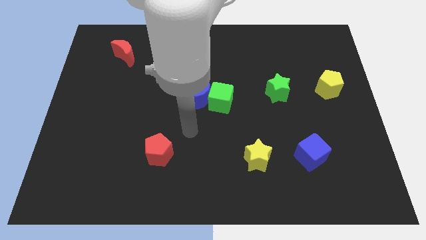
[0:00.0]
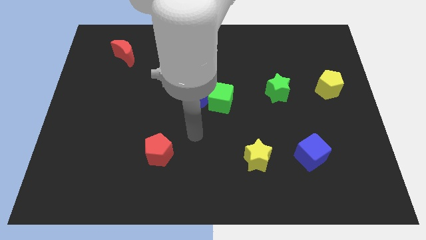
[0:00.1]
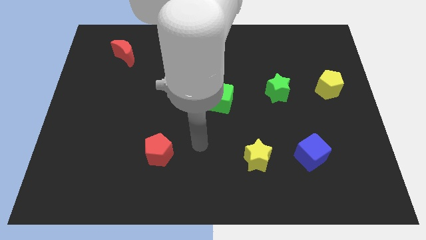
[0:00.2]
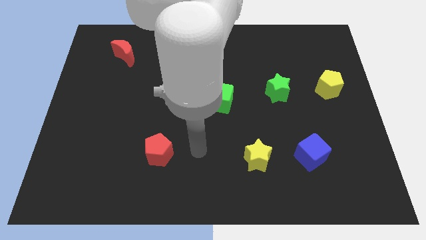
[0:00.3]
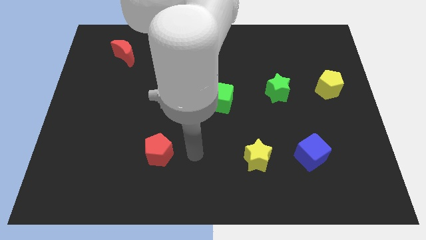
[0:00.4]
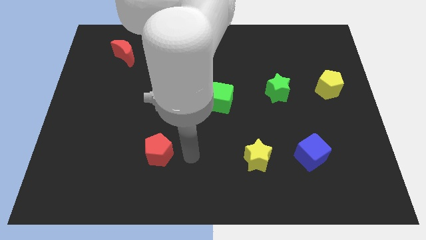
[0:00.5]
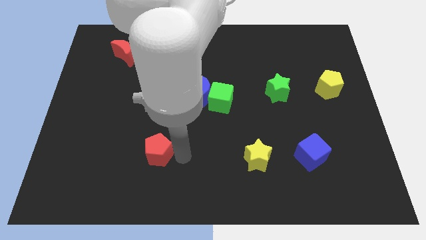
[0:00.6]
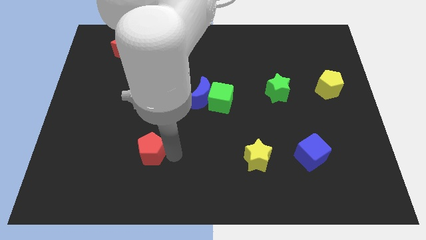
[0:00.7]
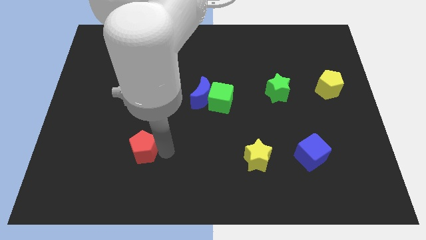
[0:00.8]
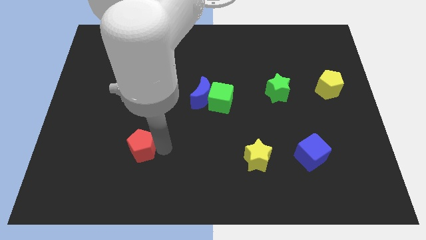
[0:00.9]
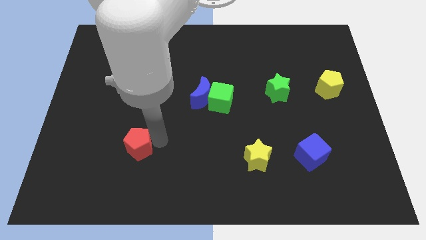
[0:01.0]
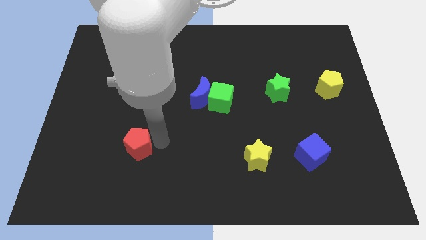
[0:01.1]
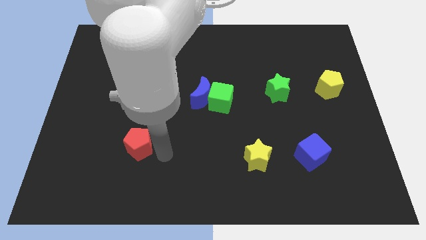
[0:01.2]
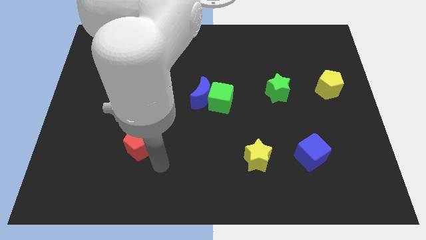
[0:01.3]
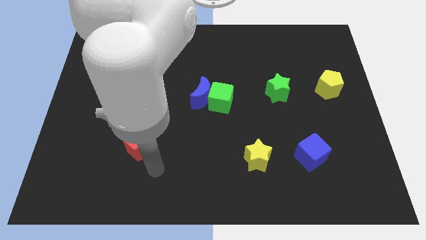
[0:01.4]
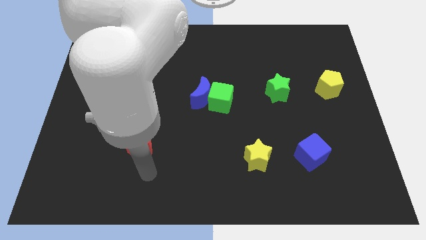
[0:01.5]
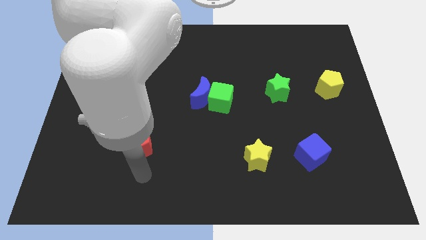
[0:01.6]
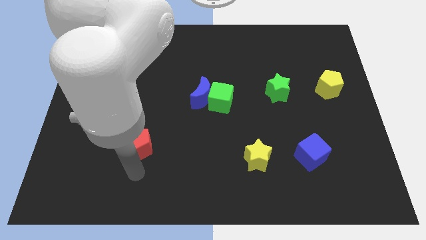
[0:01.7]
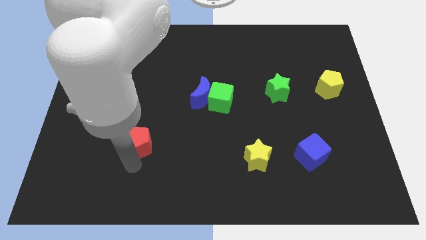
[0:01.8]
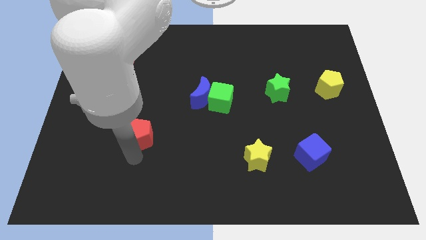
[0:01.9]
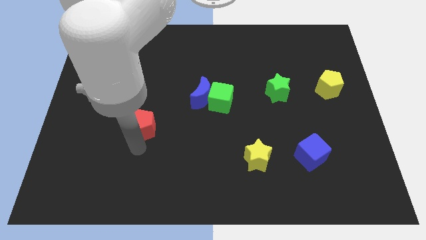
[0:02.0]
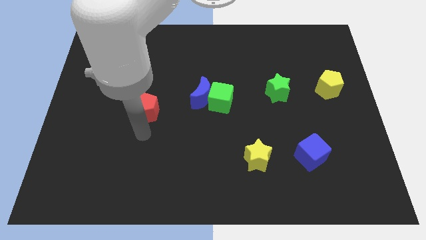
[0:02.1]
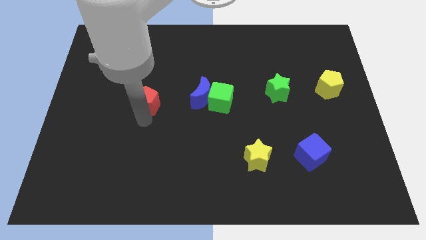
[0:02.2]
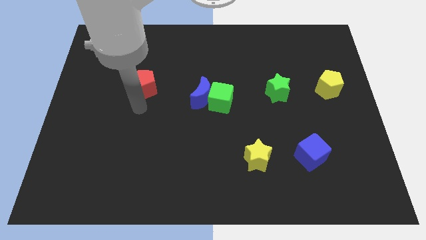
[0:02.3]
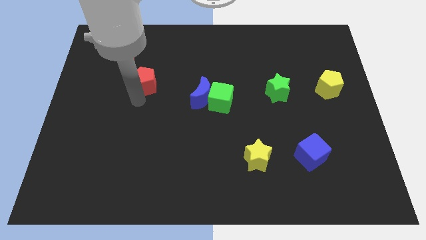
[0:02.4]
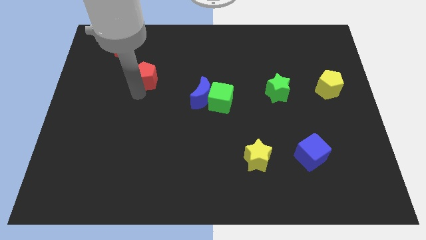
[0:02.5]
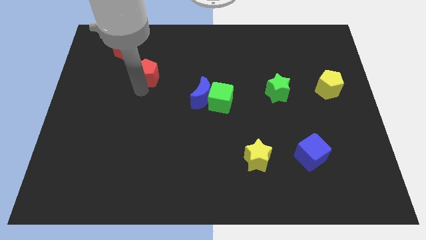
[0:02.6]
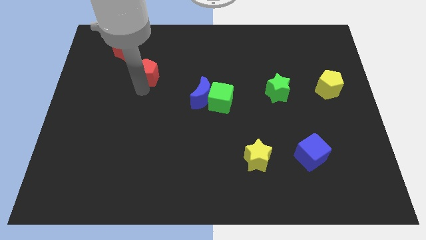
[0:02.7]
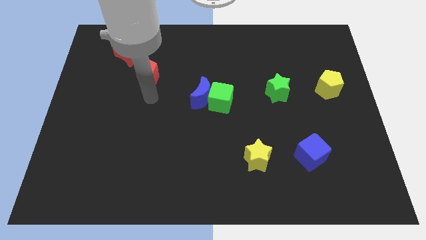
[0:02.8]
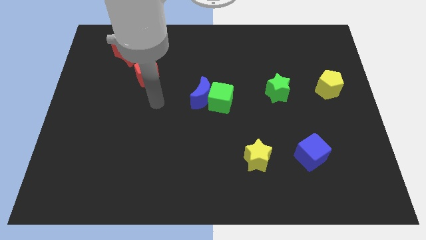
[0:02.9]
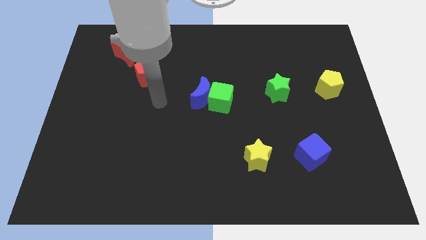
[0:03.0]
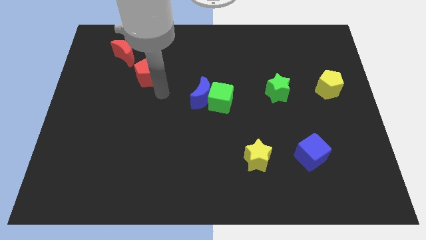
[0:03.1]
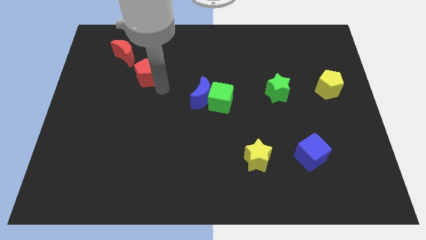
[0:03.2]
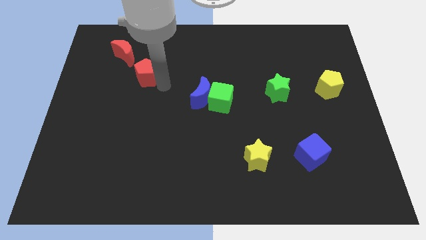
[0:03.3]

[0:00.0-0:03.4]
place the red pentagon in between the blue moon and red moon

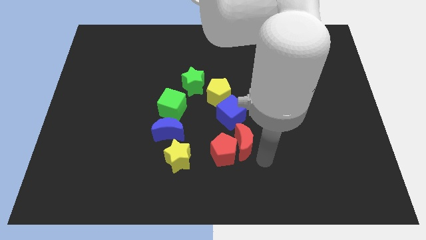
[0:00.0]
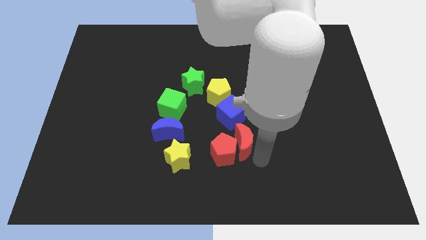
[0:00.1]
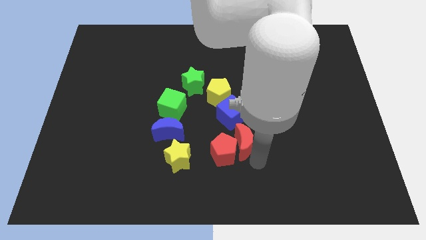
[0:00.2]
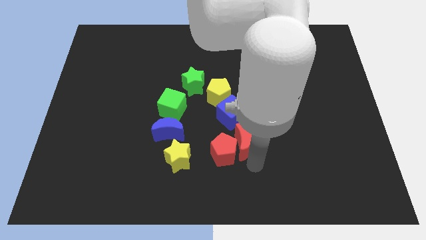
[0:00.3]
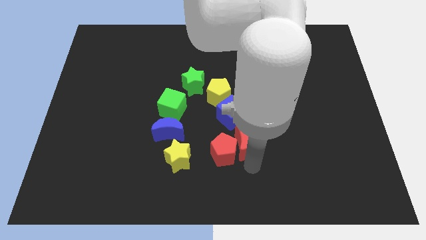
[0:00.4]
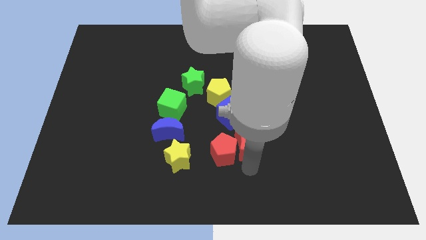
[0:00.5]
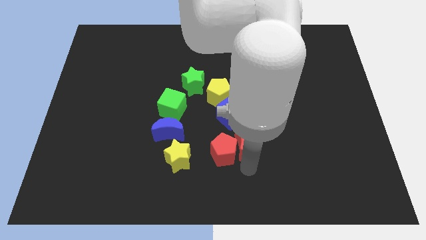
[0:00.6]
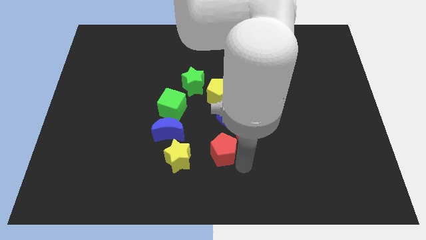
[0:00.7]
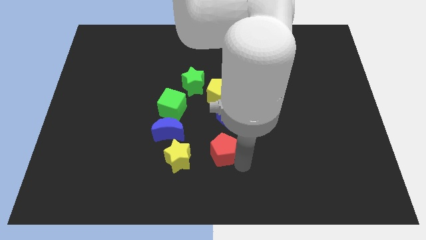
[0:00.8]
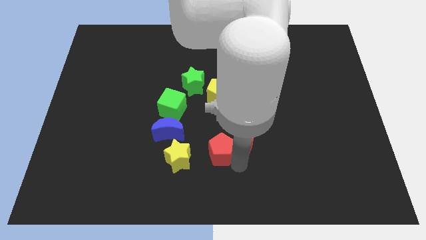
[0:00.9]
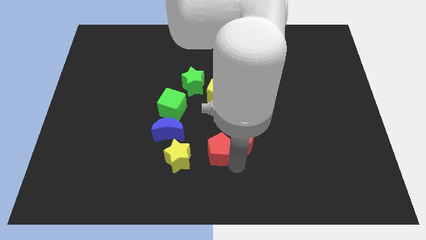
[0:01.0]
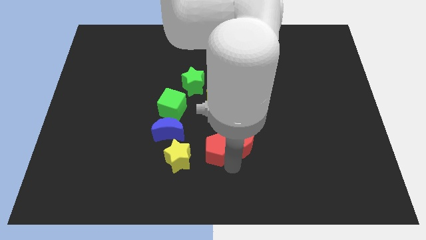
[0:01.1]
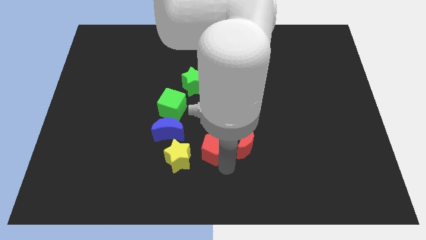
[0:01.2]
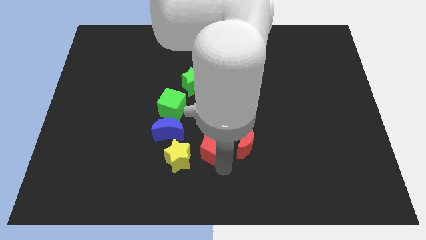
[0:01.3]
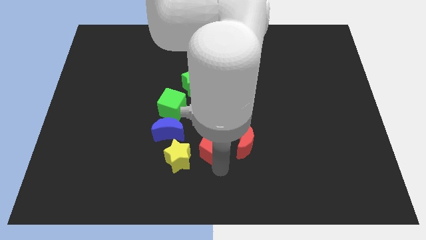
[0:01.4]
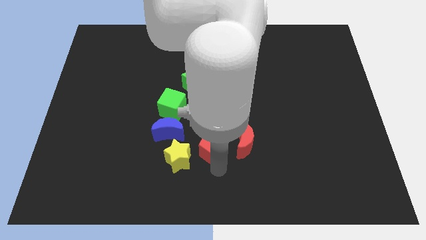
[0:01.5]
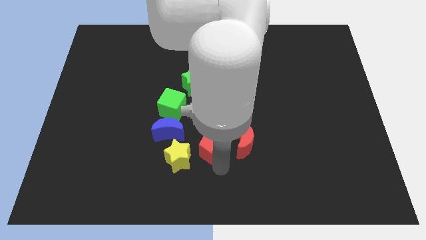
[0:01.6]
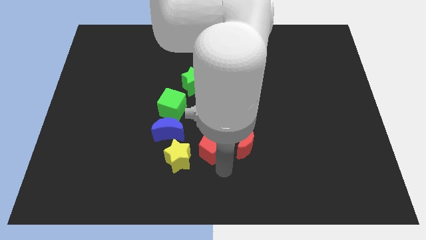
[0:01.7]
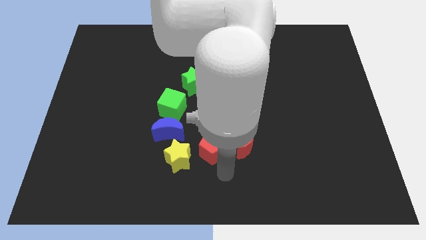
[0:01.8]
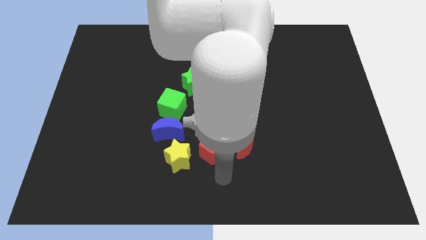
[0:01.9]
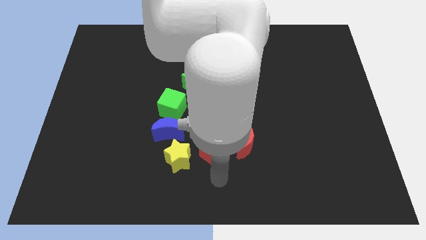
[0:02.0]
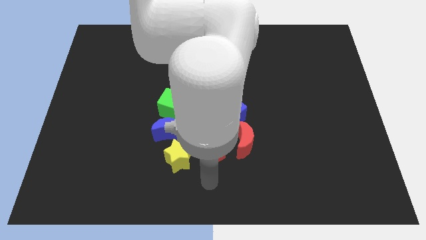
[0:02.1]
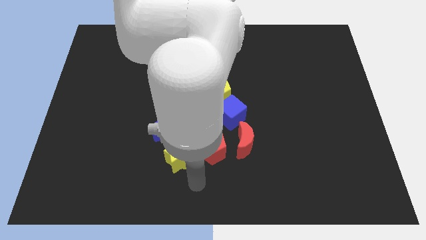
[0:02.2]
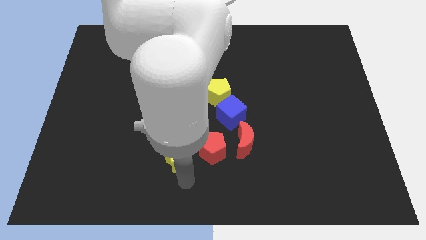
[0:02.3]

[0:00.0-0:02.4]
push the red pentagon in between the red crescent and the yellow star

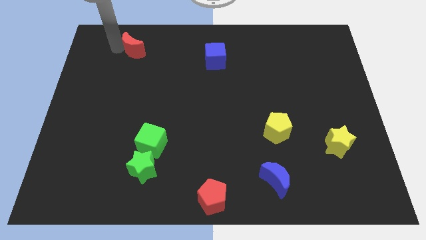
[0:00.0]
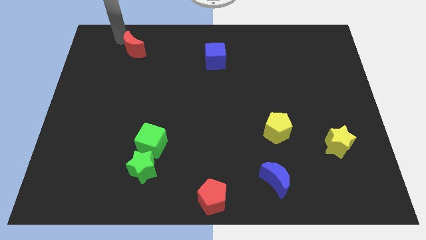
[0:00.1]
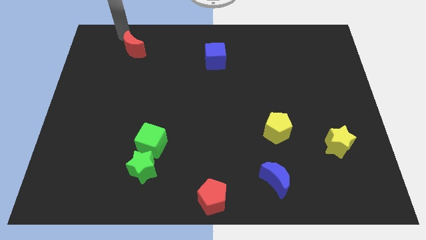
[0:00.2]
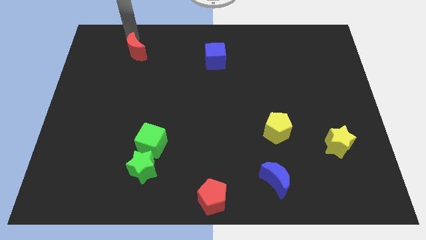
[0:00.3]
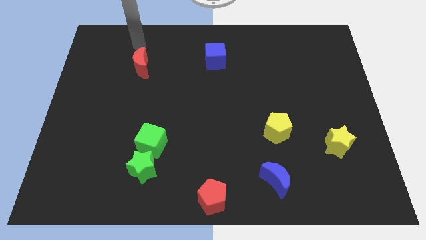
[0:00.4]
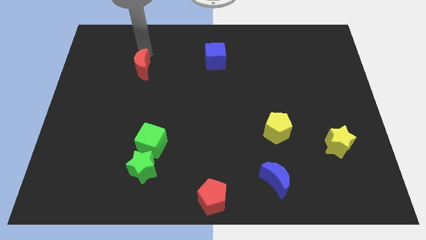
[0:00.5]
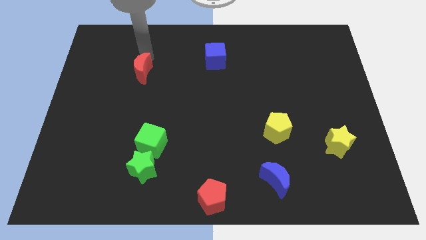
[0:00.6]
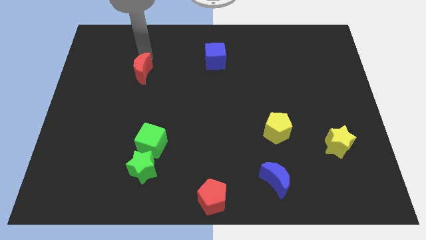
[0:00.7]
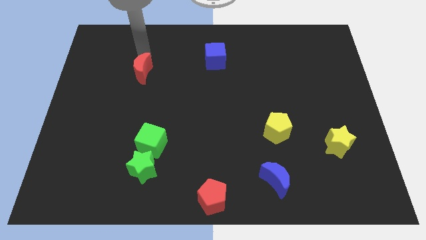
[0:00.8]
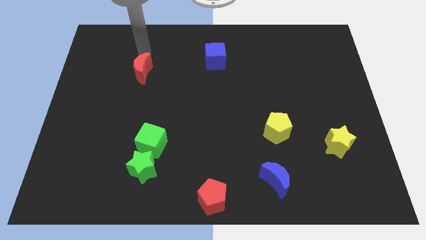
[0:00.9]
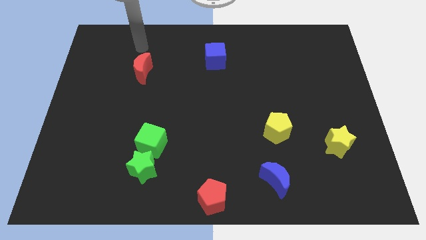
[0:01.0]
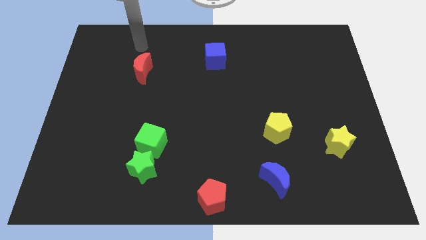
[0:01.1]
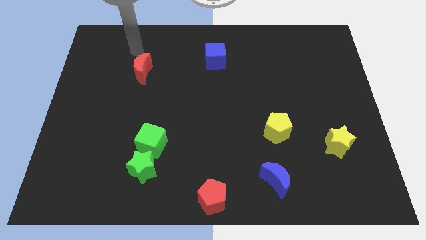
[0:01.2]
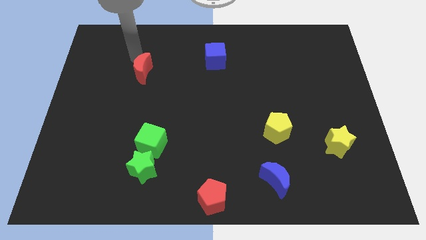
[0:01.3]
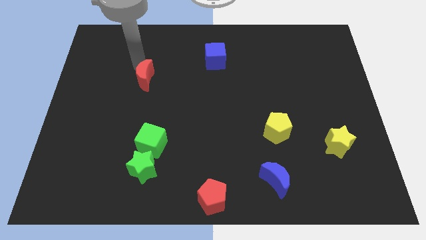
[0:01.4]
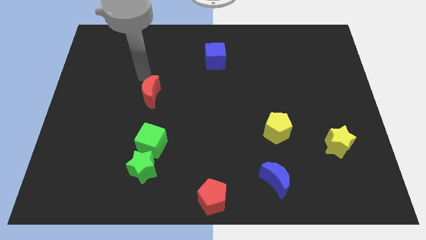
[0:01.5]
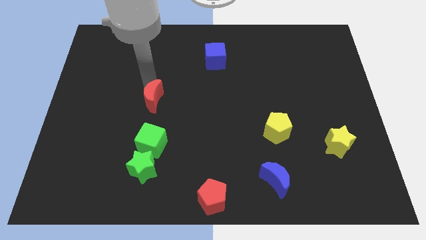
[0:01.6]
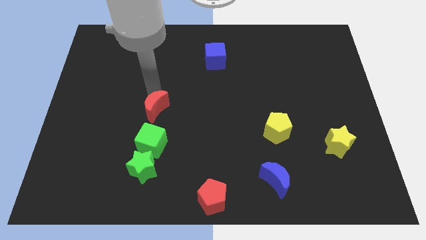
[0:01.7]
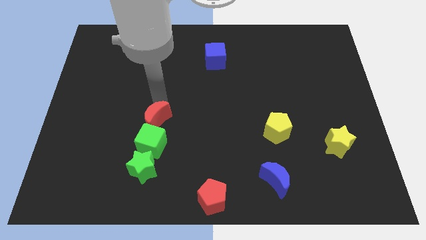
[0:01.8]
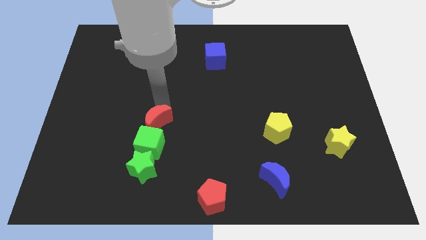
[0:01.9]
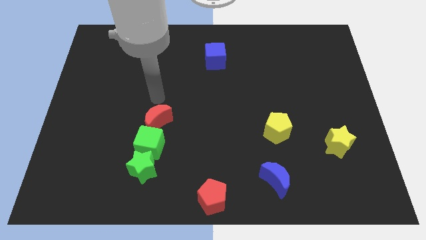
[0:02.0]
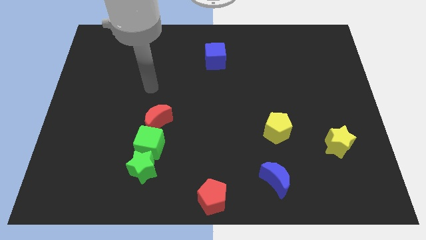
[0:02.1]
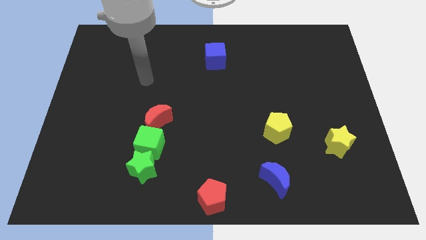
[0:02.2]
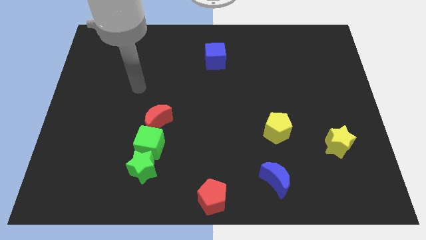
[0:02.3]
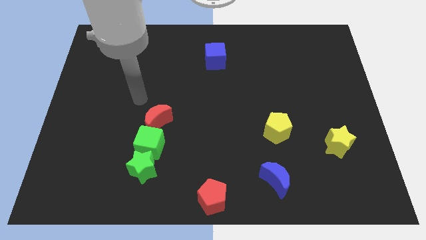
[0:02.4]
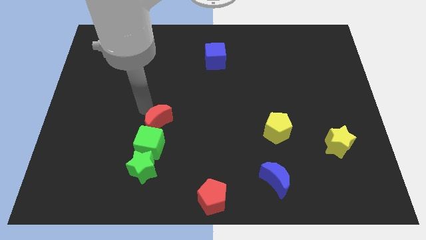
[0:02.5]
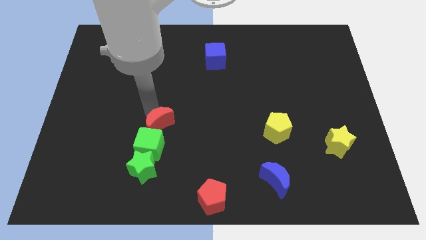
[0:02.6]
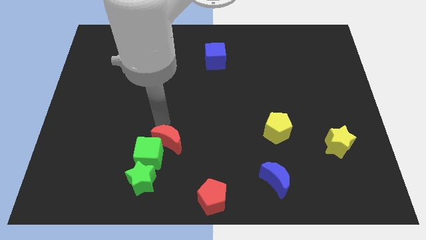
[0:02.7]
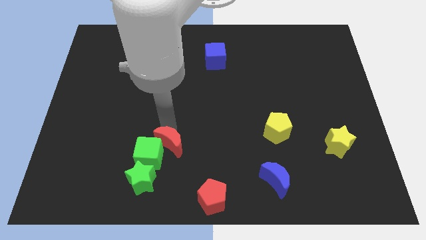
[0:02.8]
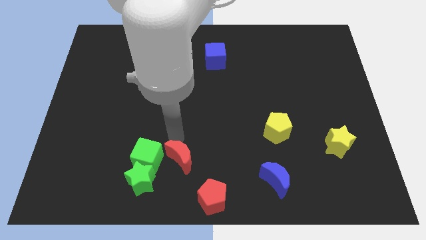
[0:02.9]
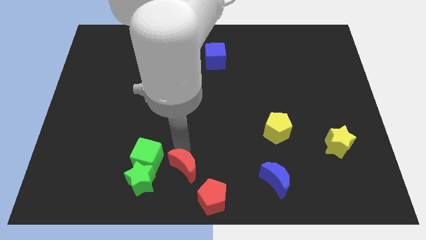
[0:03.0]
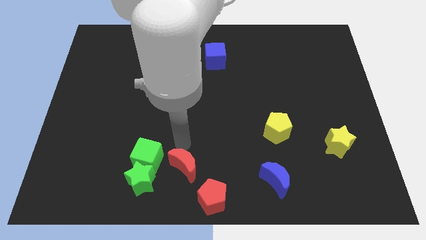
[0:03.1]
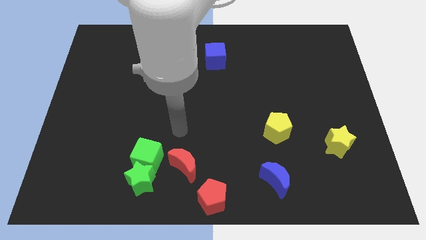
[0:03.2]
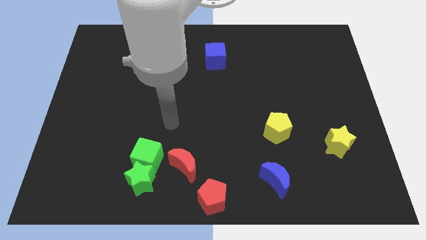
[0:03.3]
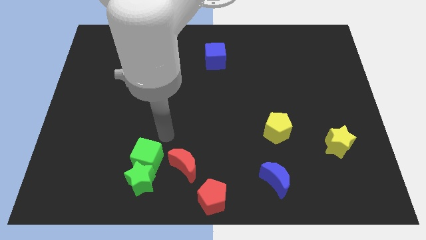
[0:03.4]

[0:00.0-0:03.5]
push the red moon to the right side of the green cube
